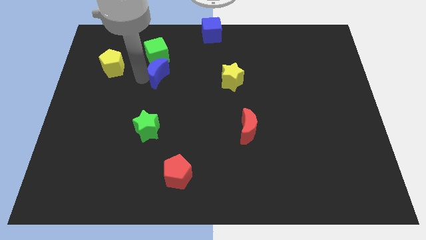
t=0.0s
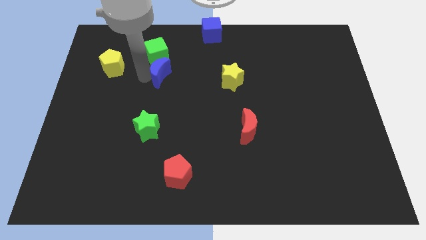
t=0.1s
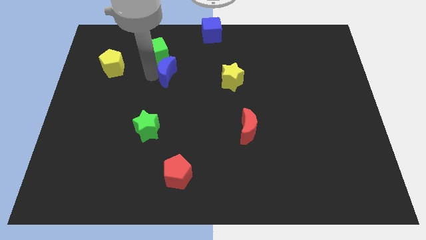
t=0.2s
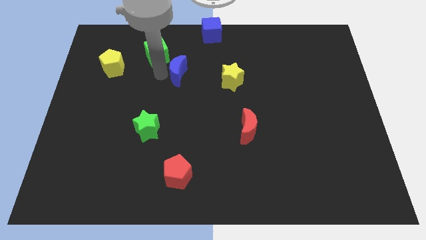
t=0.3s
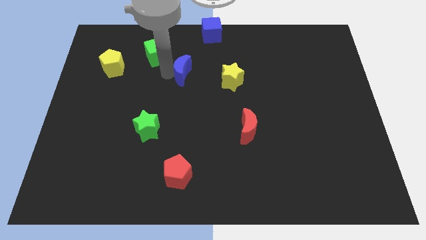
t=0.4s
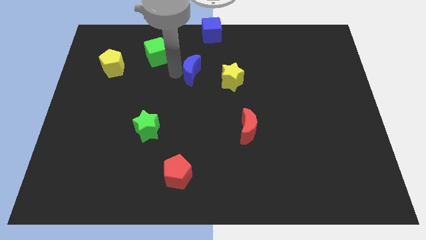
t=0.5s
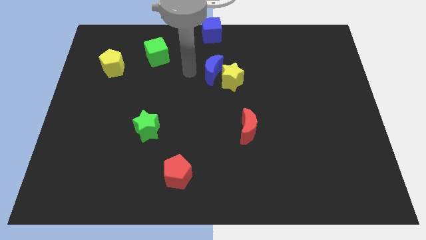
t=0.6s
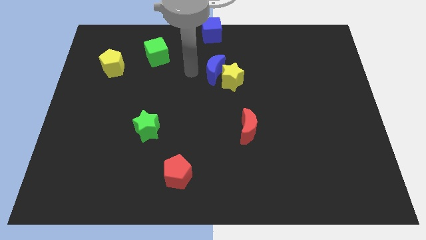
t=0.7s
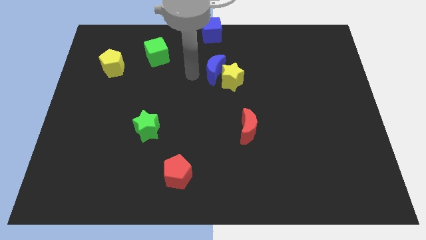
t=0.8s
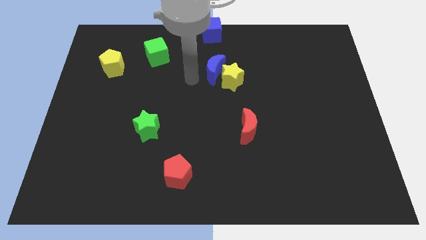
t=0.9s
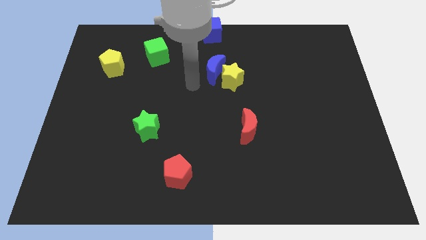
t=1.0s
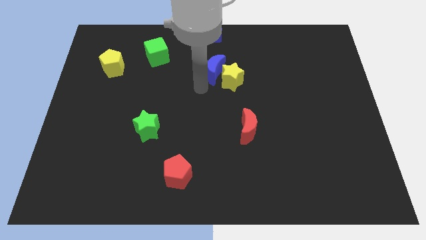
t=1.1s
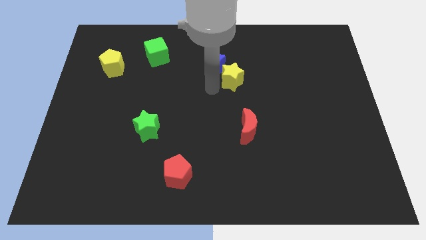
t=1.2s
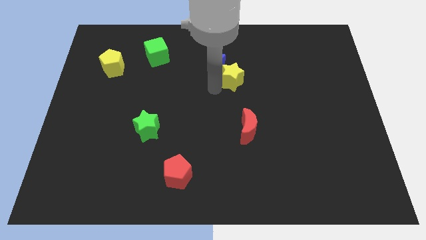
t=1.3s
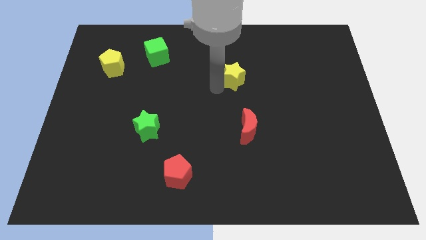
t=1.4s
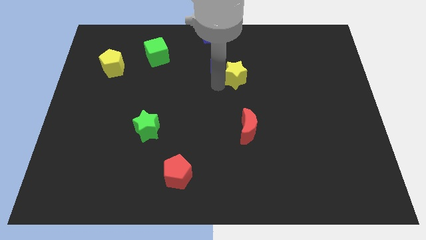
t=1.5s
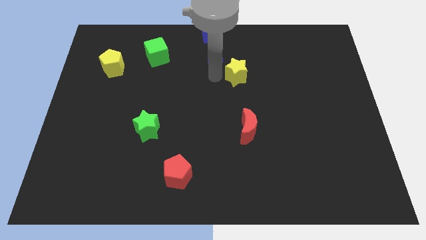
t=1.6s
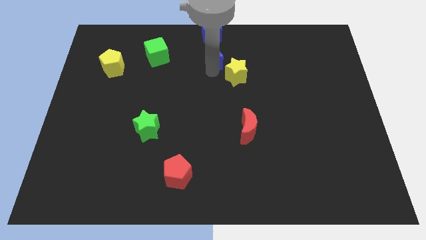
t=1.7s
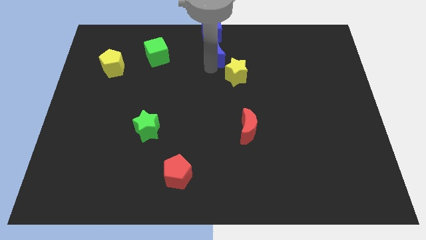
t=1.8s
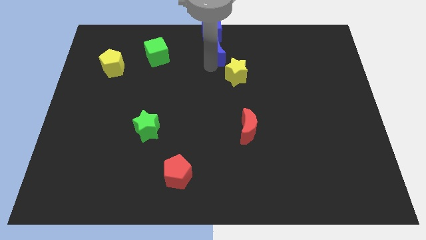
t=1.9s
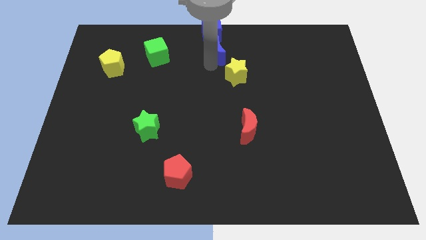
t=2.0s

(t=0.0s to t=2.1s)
place the blue moon in between the blue cube and yellow star

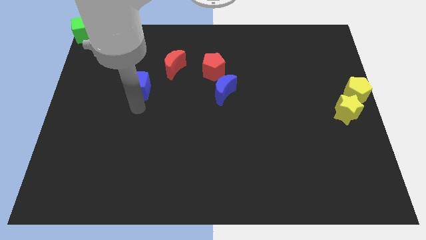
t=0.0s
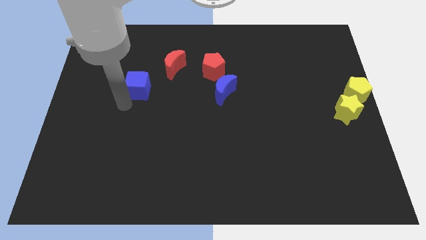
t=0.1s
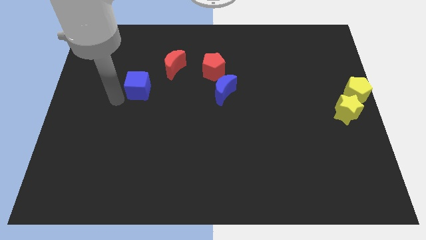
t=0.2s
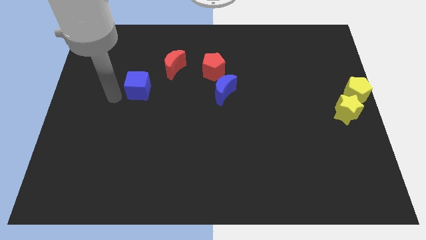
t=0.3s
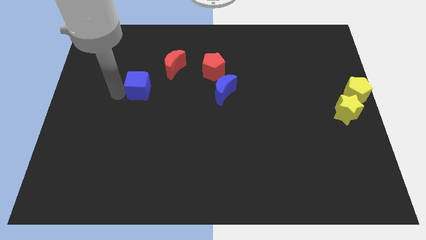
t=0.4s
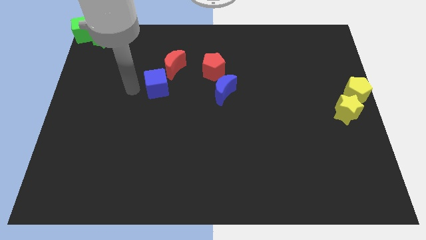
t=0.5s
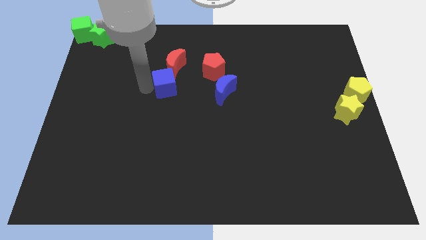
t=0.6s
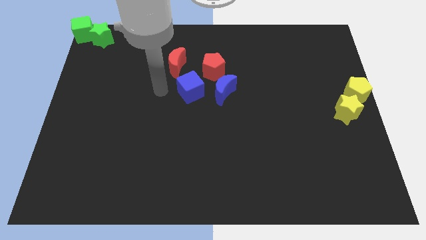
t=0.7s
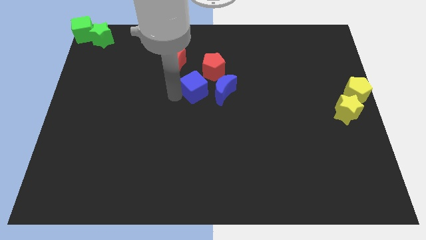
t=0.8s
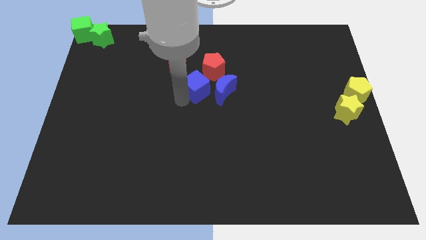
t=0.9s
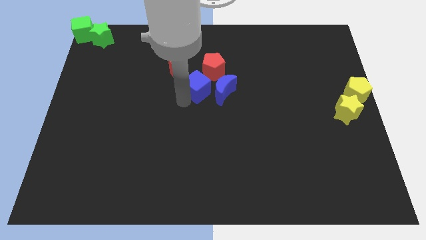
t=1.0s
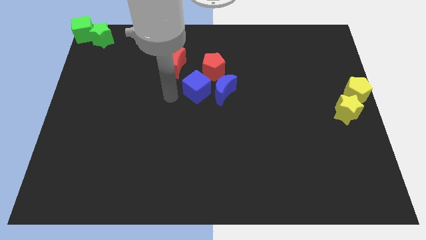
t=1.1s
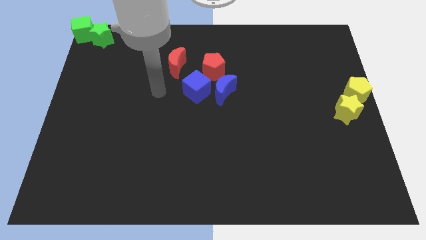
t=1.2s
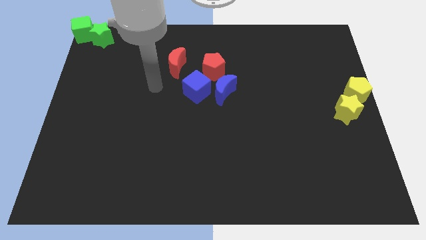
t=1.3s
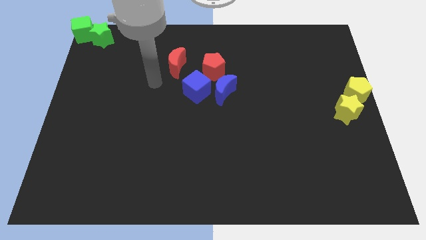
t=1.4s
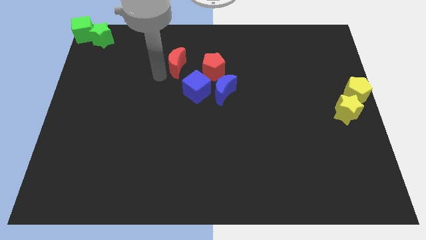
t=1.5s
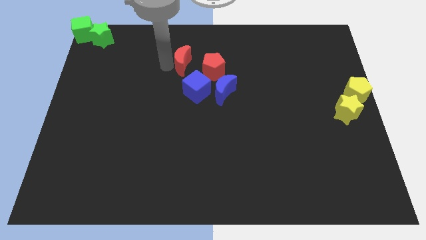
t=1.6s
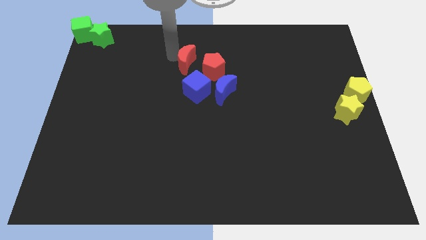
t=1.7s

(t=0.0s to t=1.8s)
place the blue cube to left side of the blue moon

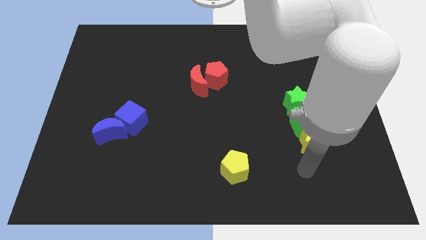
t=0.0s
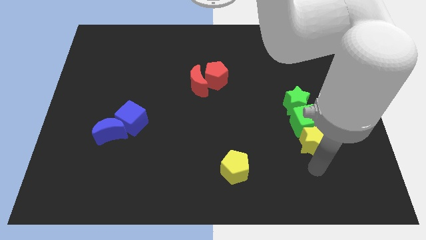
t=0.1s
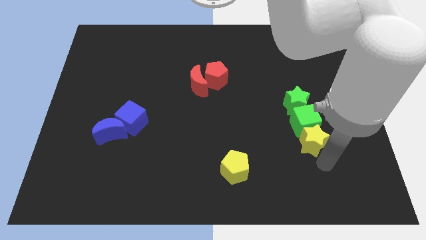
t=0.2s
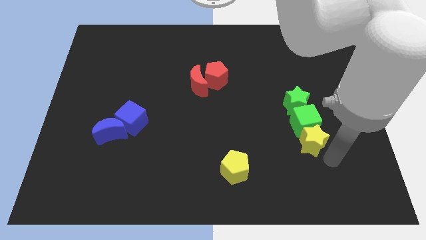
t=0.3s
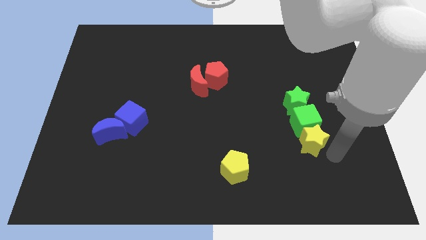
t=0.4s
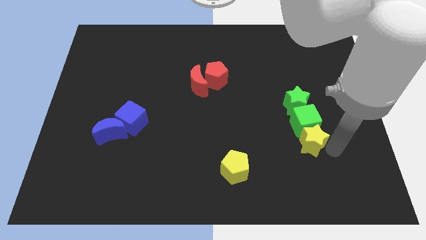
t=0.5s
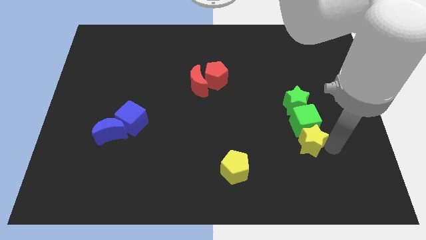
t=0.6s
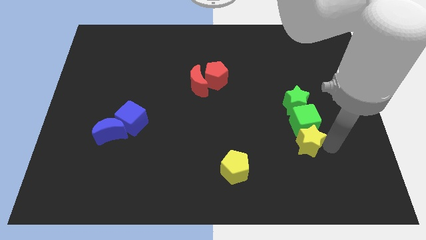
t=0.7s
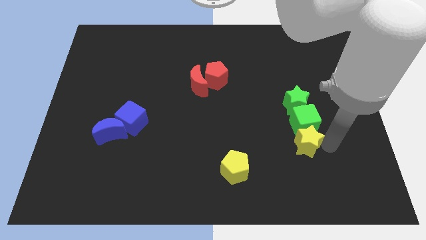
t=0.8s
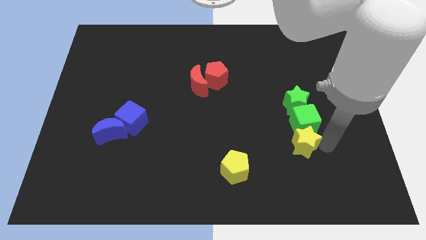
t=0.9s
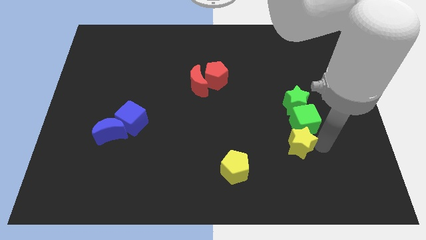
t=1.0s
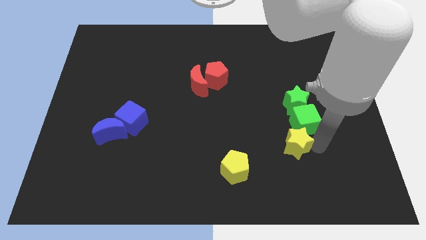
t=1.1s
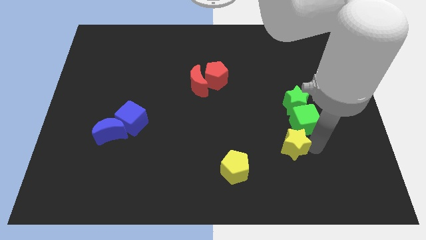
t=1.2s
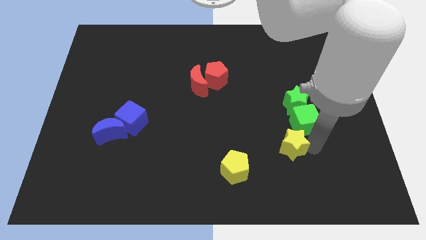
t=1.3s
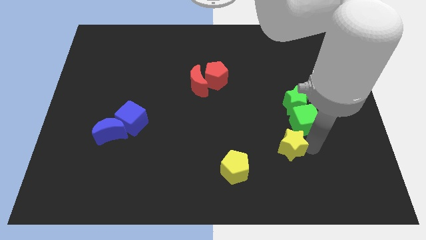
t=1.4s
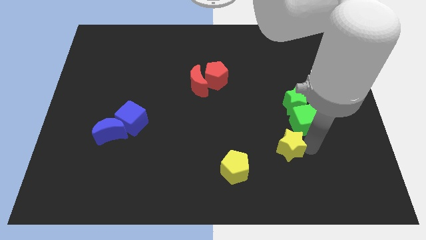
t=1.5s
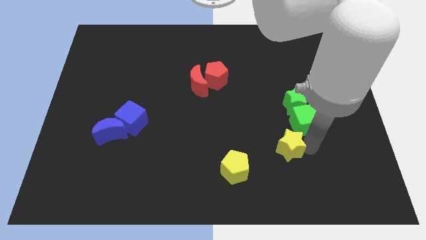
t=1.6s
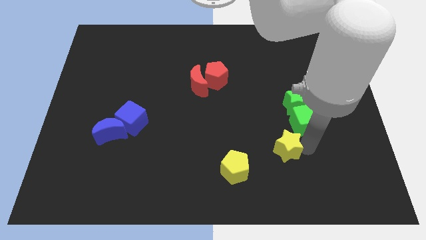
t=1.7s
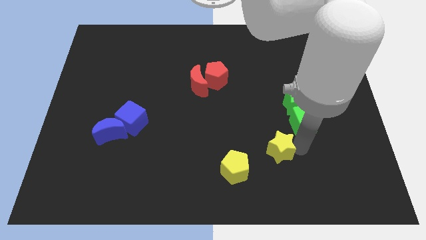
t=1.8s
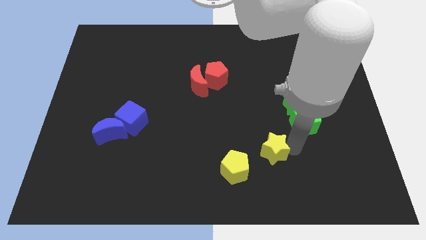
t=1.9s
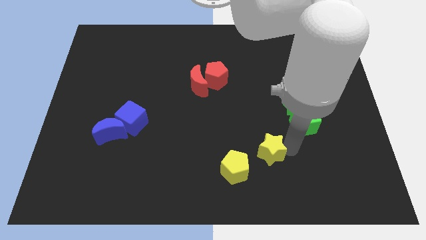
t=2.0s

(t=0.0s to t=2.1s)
push the yellow star towards the yellow pentagon

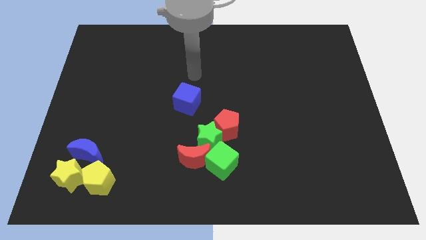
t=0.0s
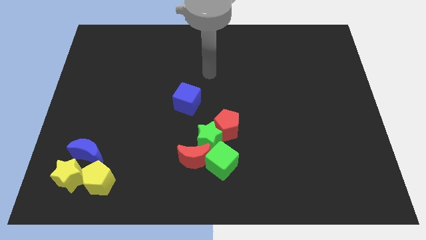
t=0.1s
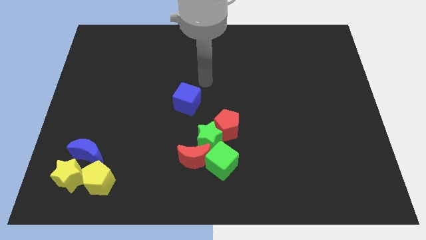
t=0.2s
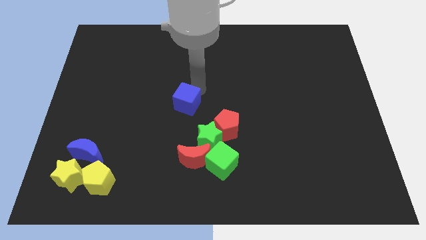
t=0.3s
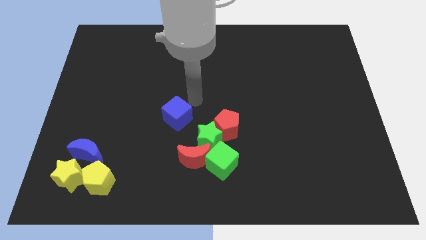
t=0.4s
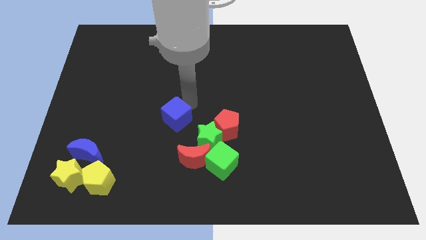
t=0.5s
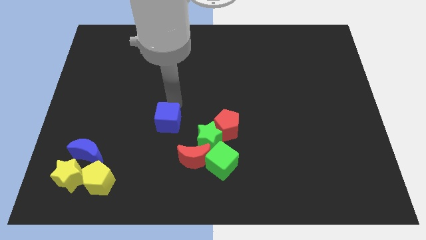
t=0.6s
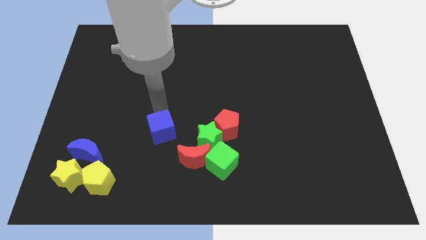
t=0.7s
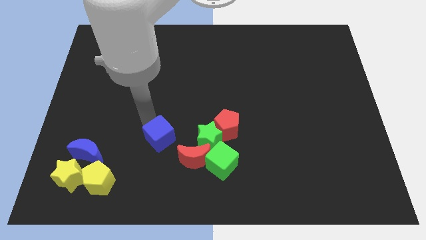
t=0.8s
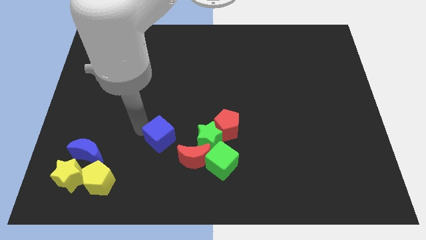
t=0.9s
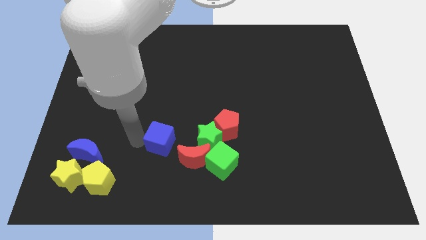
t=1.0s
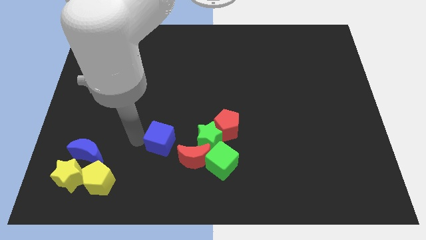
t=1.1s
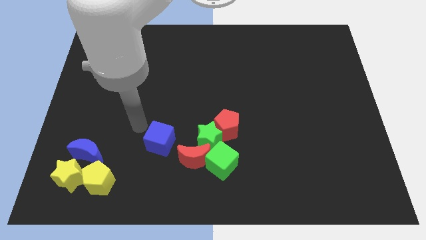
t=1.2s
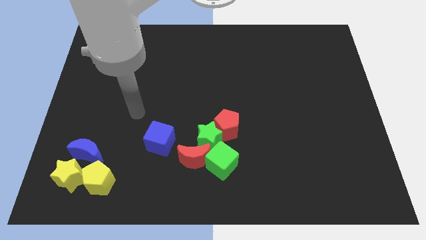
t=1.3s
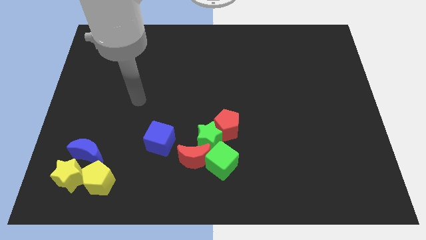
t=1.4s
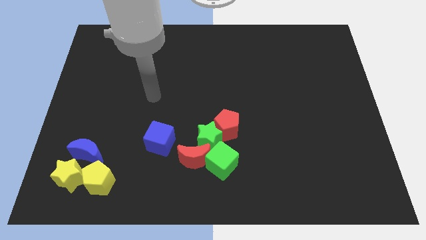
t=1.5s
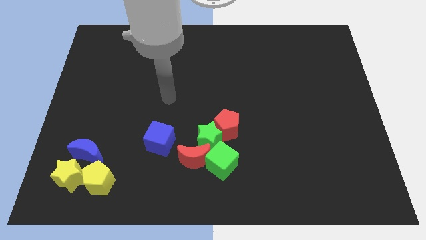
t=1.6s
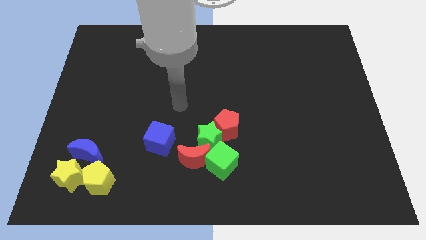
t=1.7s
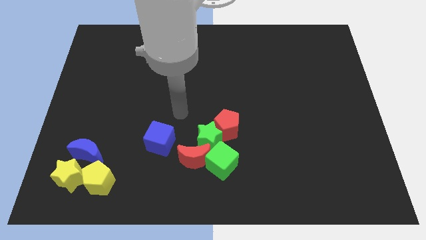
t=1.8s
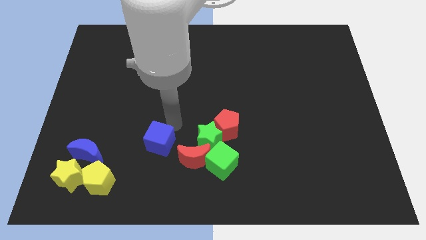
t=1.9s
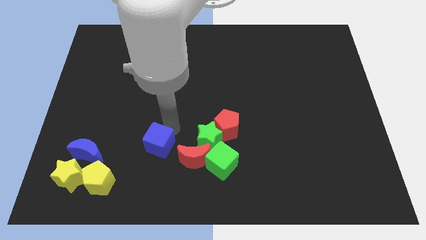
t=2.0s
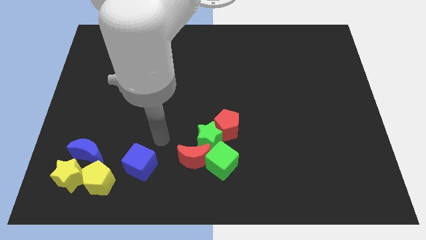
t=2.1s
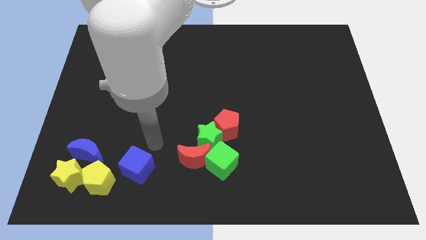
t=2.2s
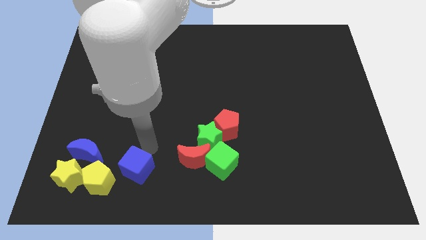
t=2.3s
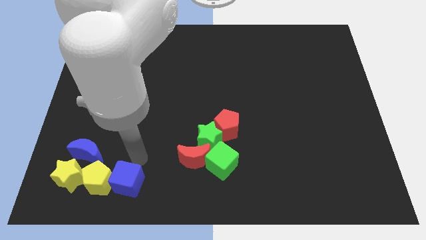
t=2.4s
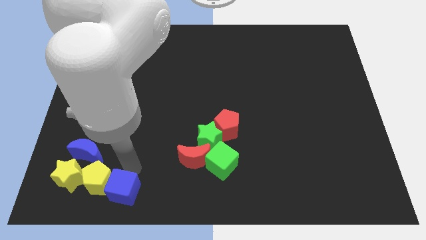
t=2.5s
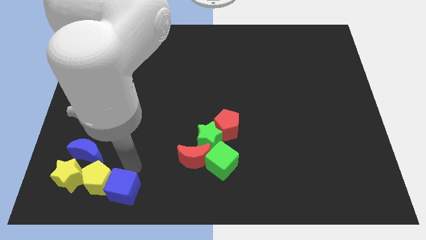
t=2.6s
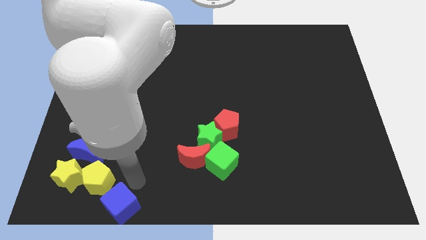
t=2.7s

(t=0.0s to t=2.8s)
move the blue cube on the right side of the yellow pentagon

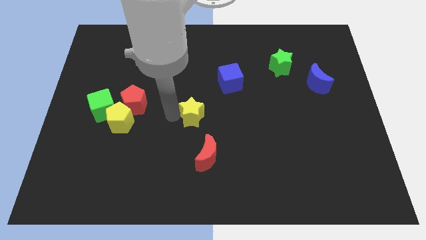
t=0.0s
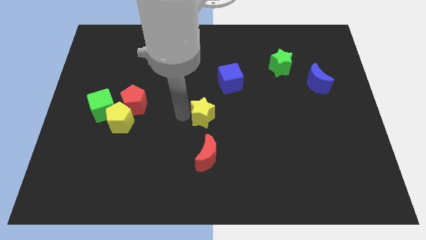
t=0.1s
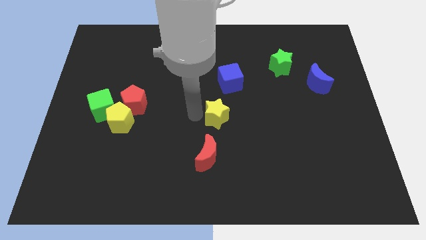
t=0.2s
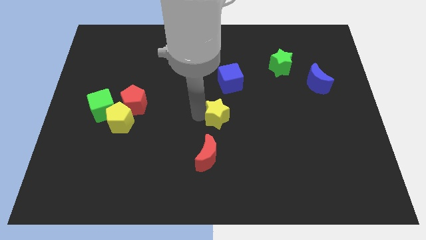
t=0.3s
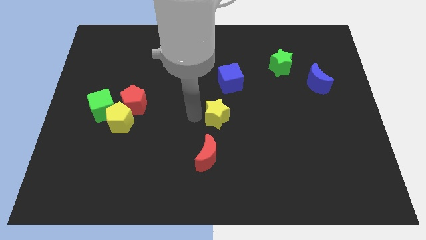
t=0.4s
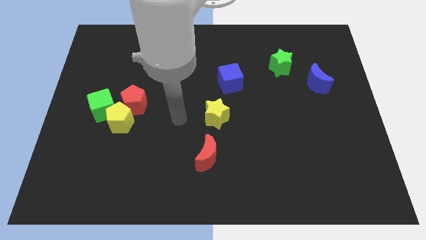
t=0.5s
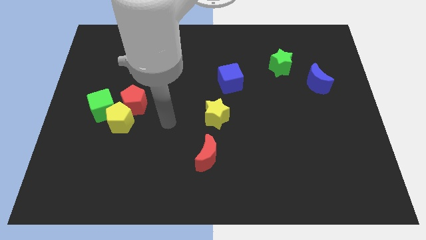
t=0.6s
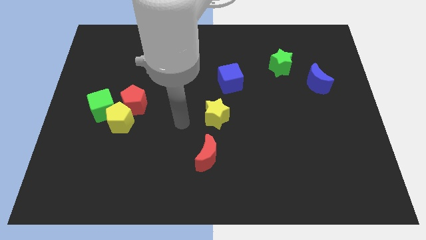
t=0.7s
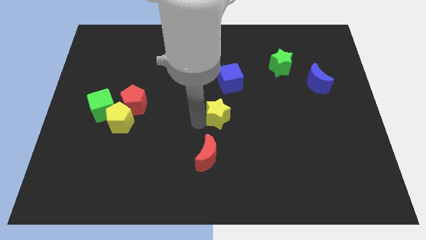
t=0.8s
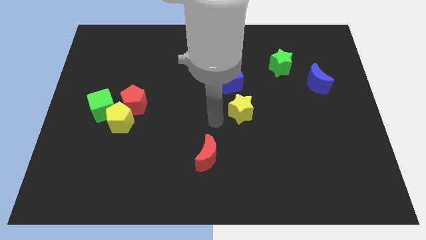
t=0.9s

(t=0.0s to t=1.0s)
place the yellow star to the center of the board
